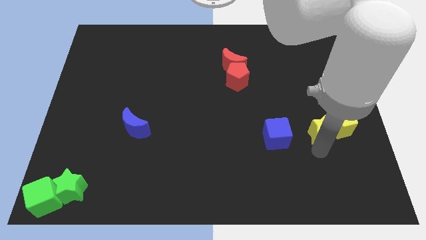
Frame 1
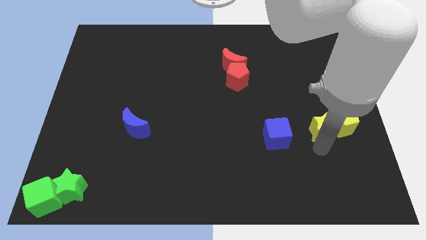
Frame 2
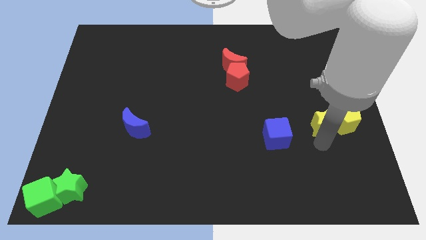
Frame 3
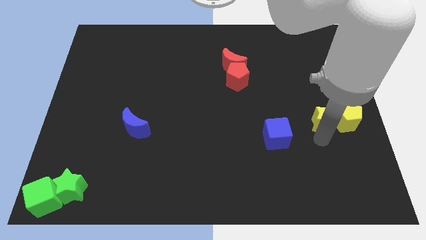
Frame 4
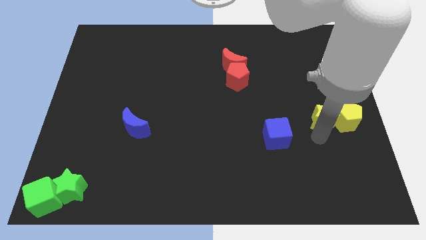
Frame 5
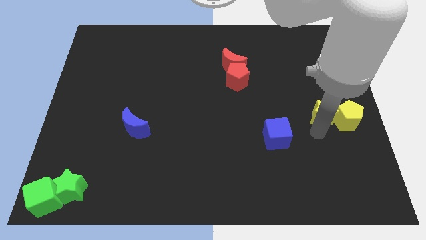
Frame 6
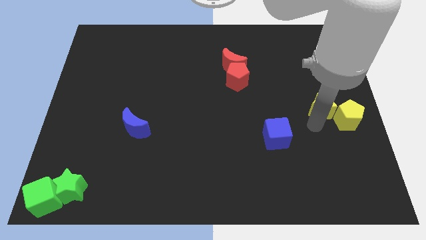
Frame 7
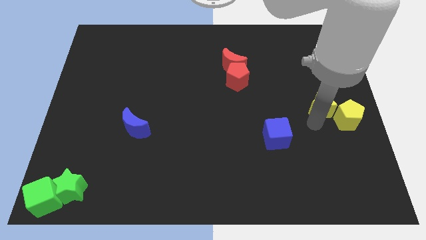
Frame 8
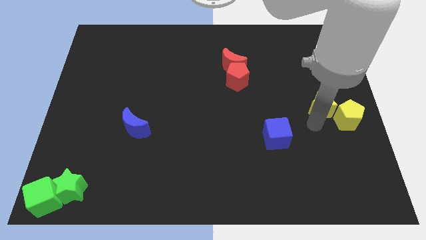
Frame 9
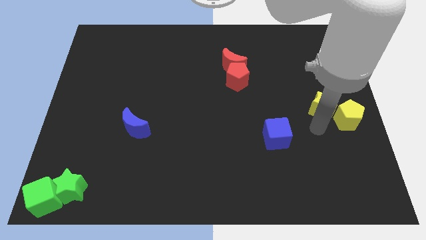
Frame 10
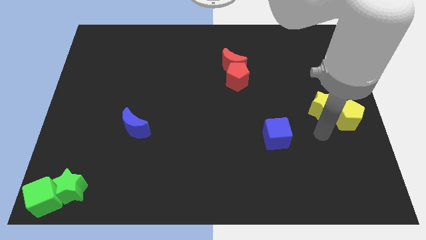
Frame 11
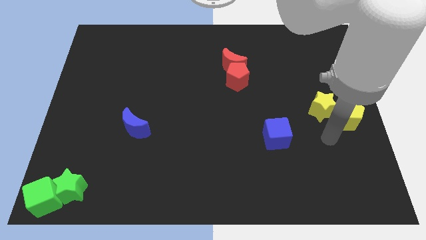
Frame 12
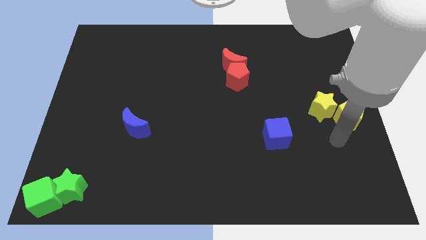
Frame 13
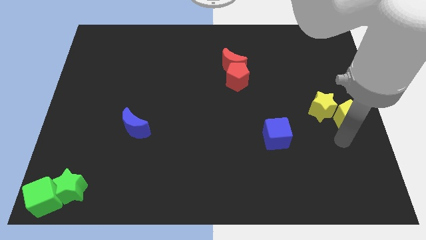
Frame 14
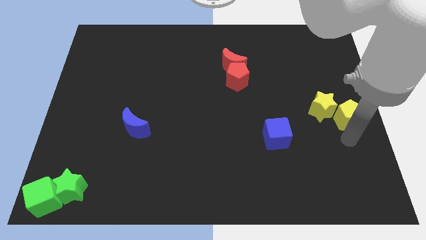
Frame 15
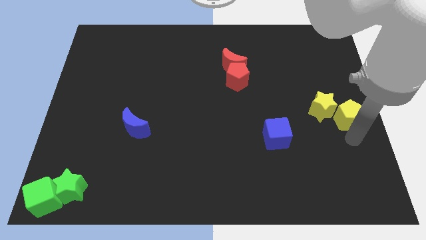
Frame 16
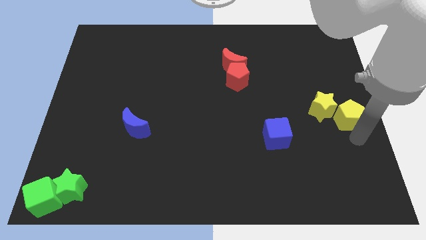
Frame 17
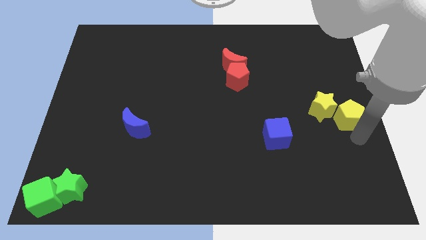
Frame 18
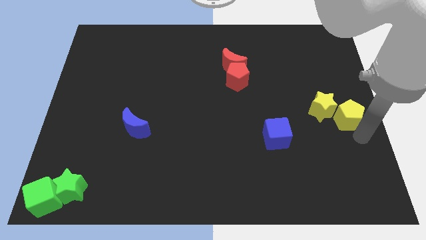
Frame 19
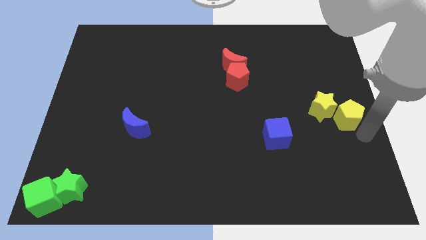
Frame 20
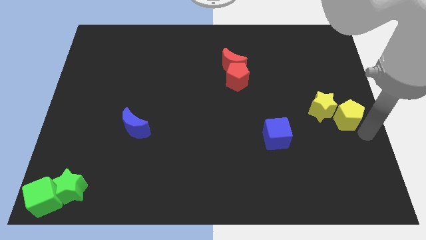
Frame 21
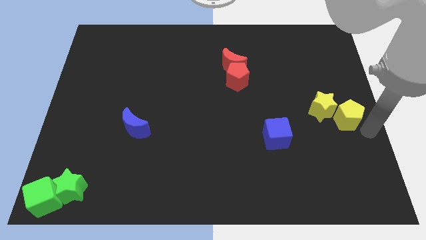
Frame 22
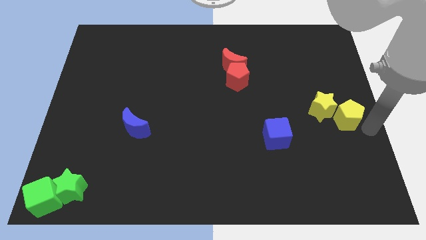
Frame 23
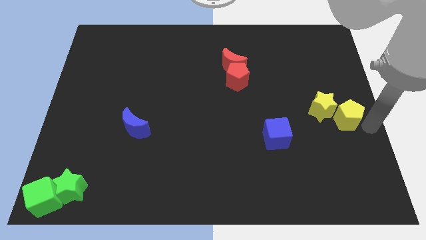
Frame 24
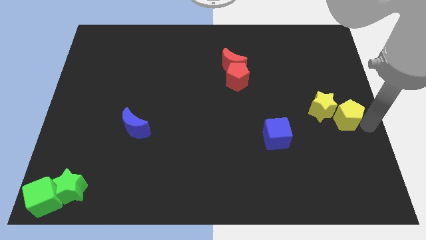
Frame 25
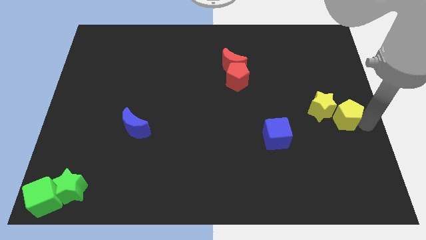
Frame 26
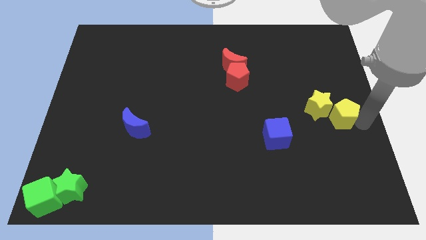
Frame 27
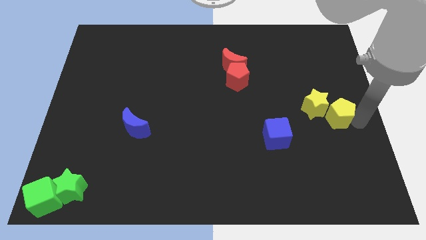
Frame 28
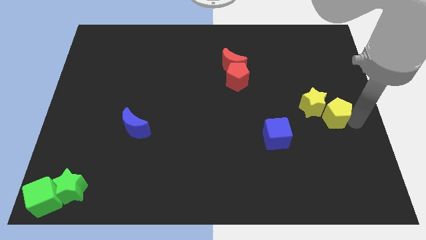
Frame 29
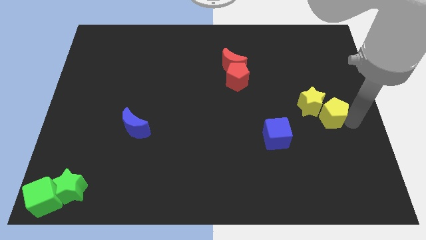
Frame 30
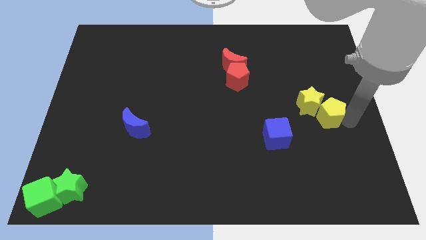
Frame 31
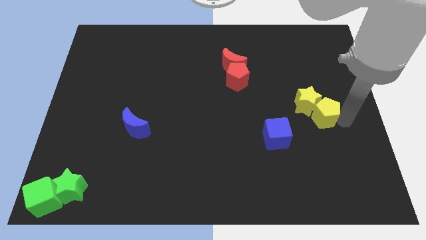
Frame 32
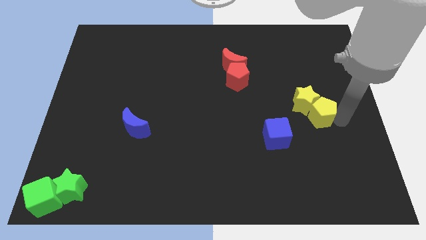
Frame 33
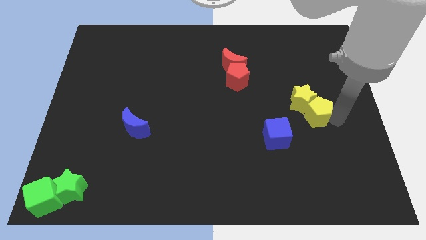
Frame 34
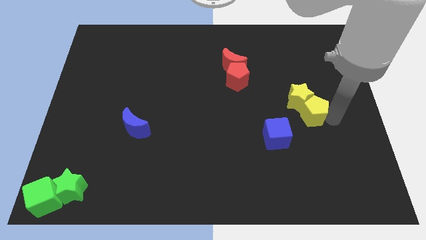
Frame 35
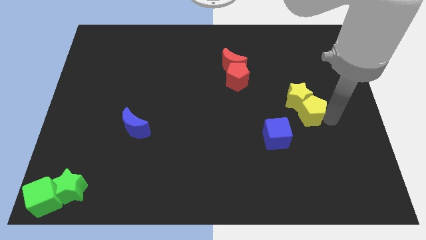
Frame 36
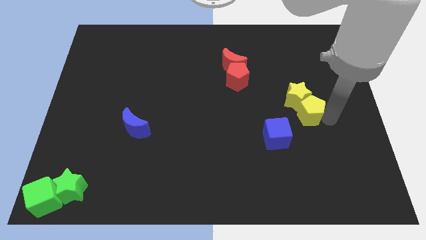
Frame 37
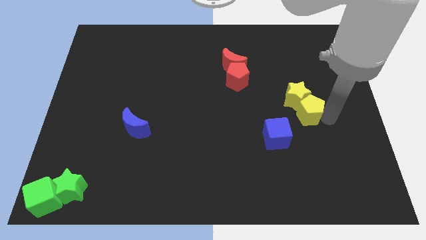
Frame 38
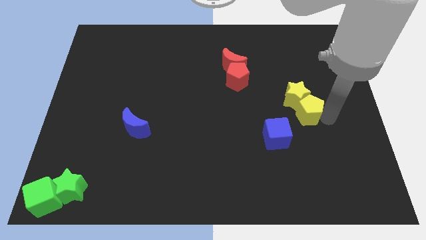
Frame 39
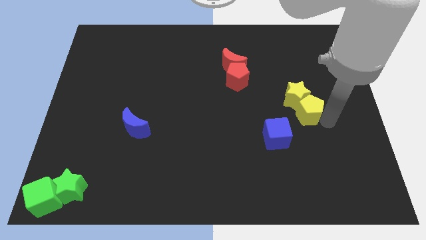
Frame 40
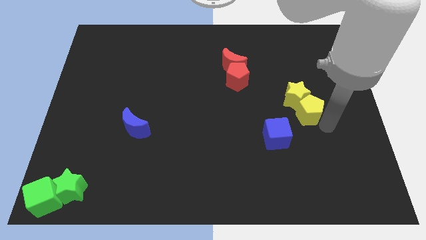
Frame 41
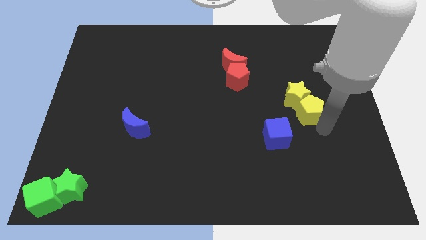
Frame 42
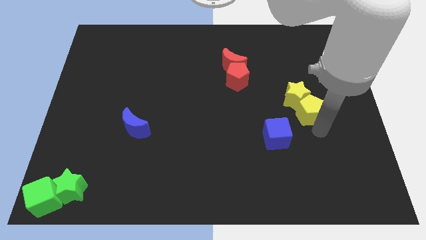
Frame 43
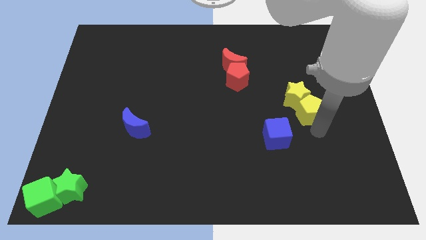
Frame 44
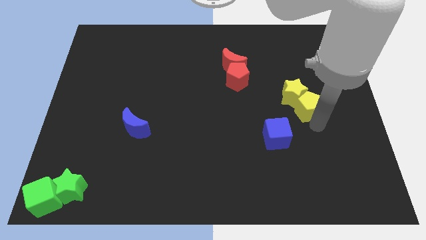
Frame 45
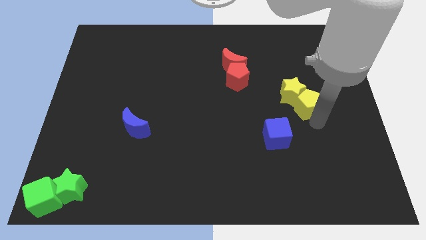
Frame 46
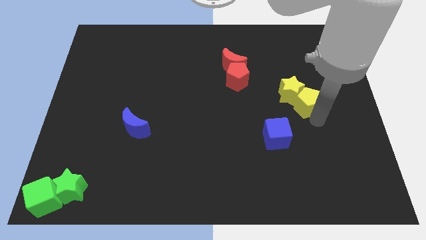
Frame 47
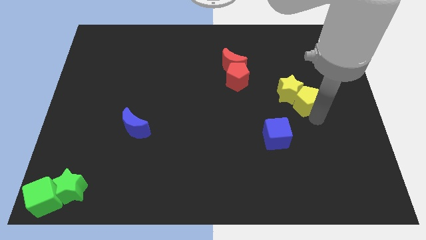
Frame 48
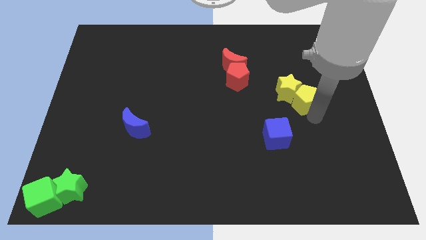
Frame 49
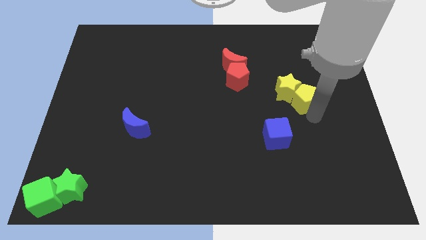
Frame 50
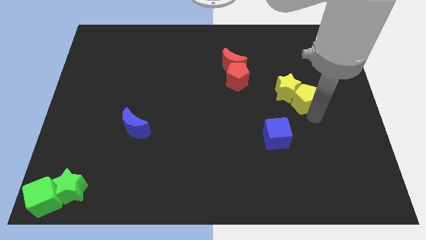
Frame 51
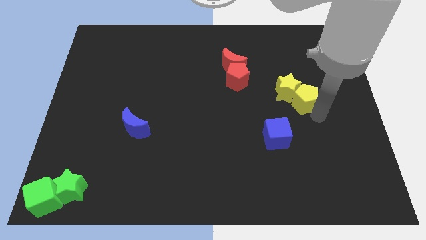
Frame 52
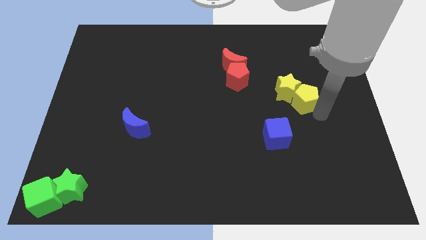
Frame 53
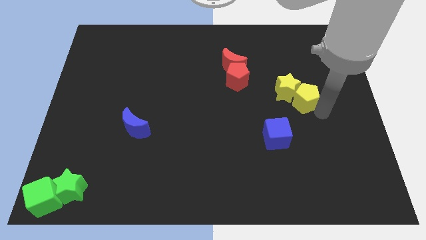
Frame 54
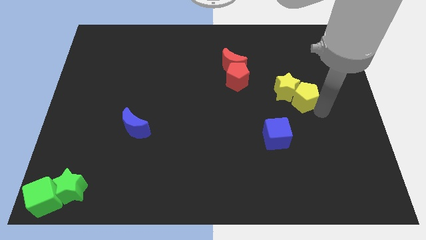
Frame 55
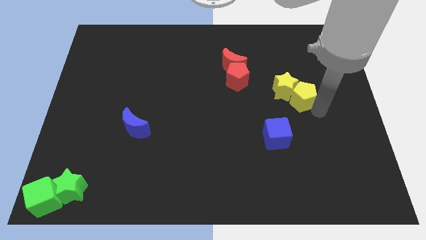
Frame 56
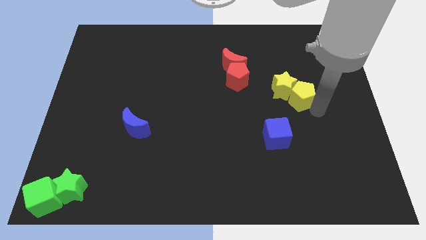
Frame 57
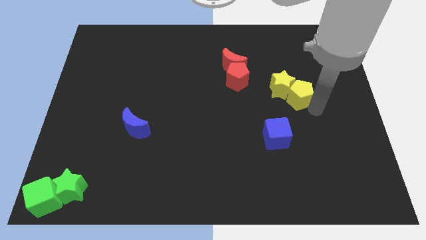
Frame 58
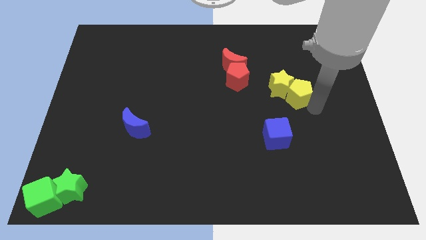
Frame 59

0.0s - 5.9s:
slide the yellow blocks towards the red blocks

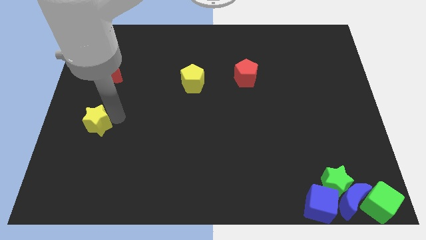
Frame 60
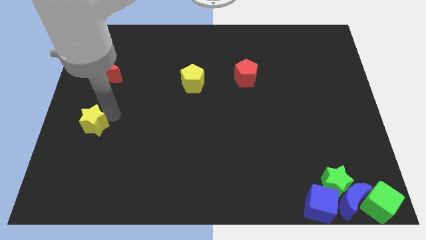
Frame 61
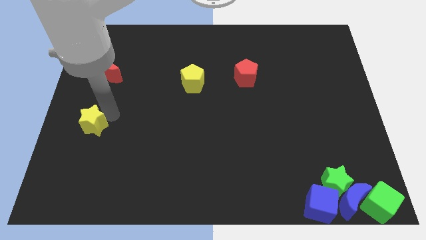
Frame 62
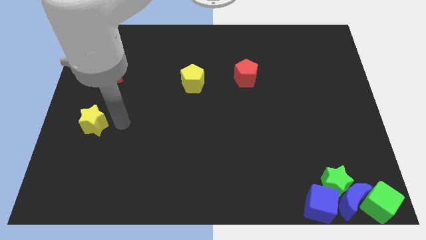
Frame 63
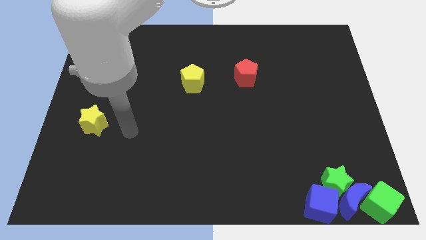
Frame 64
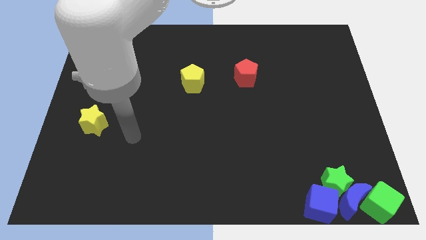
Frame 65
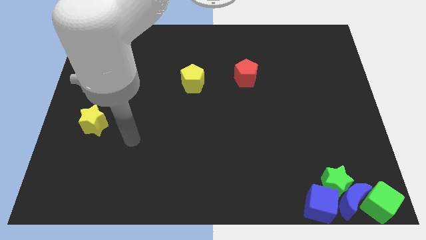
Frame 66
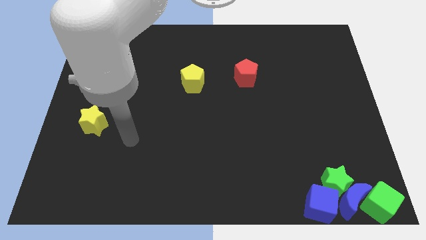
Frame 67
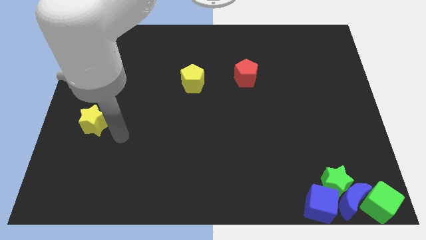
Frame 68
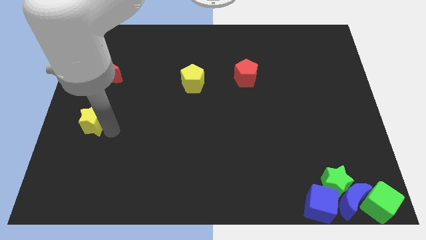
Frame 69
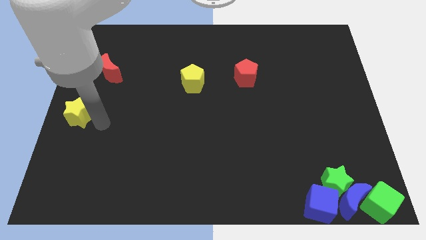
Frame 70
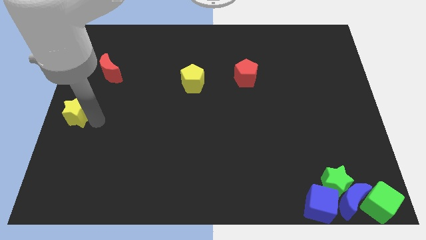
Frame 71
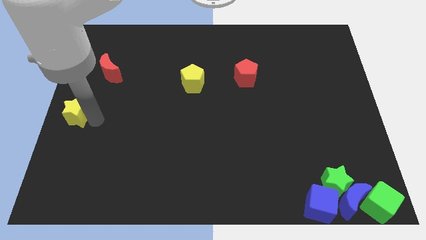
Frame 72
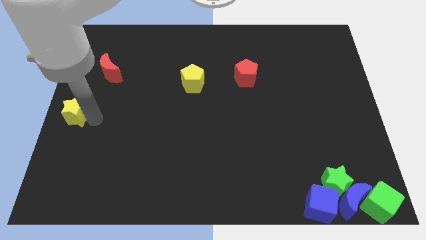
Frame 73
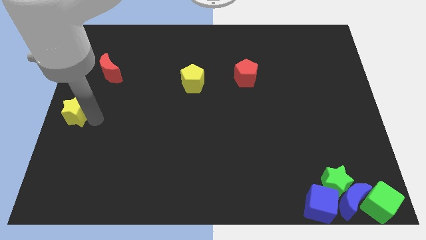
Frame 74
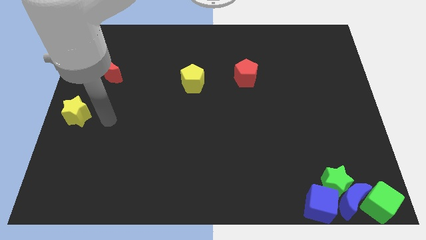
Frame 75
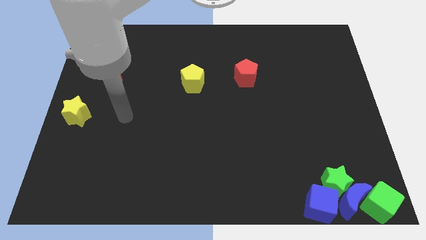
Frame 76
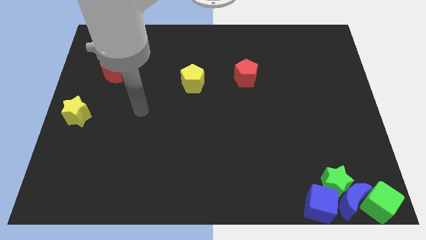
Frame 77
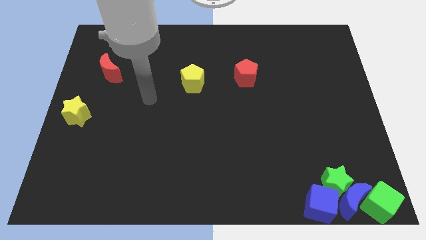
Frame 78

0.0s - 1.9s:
push yellow star to the left center of the board

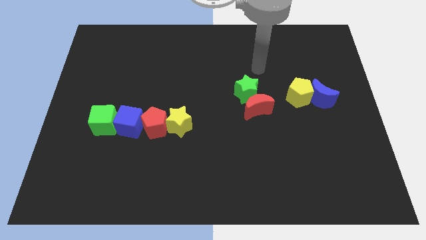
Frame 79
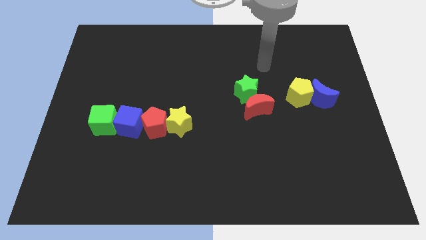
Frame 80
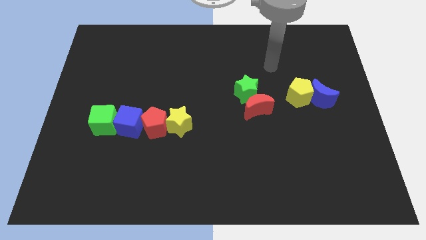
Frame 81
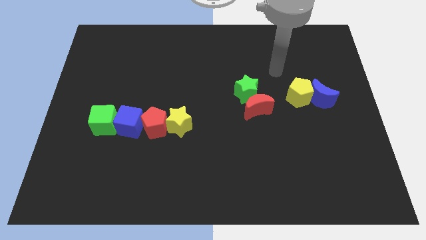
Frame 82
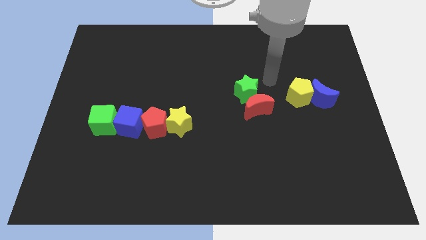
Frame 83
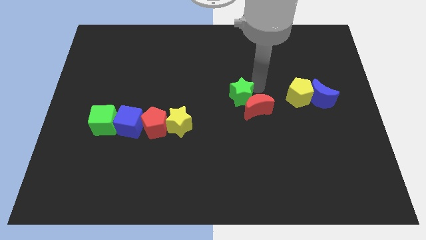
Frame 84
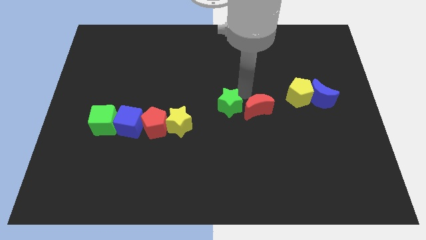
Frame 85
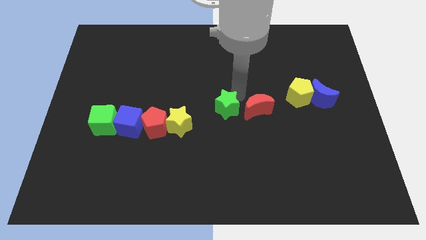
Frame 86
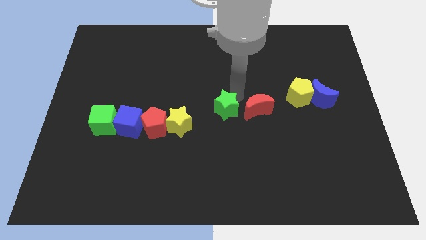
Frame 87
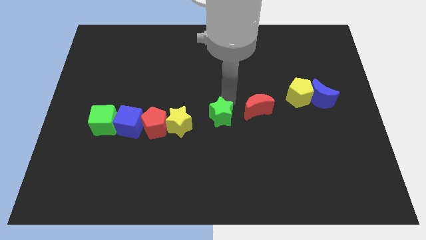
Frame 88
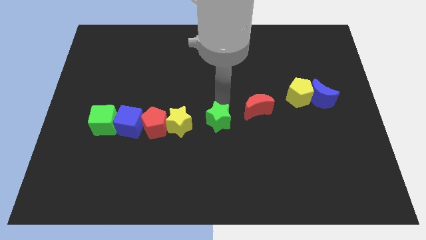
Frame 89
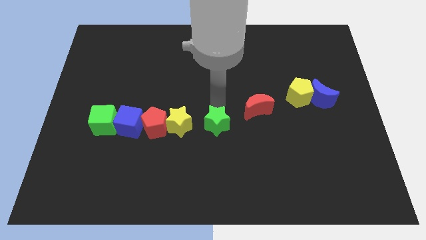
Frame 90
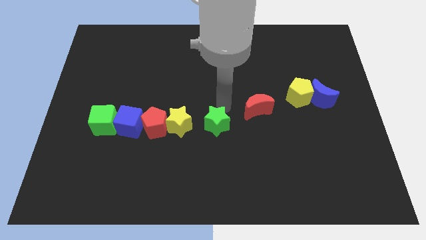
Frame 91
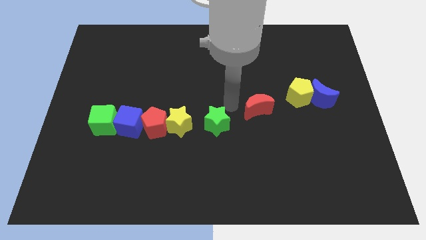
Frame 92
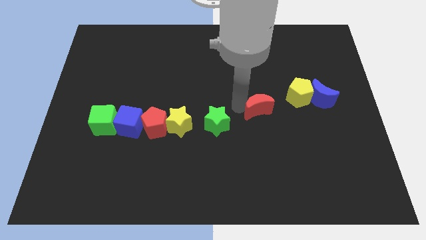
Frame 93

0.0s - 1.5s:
move the green star to the right of the yellow star
